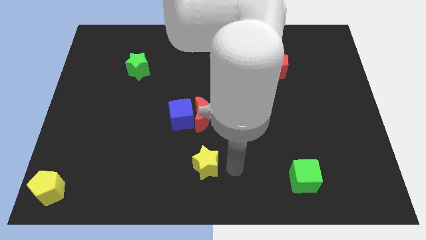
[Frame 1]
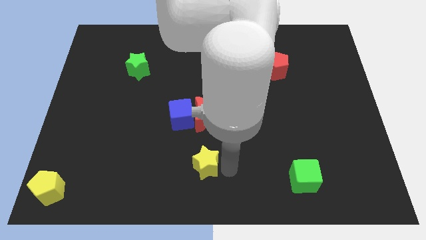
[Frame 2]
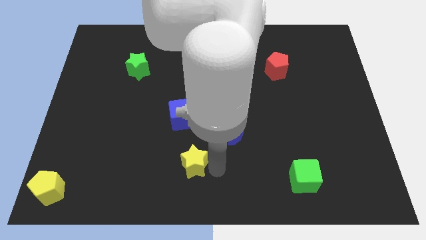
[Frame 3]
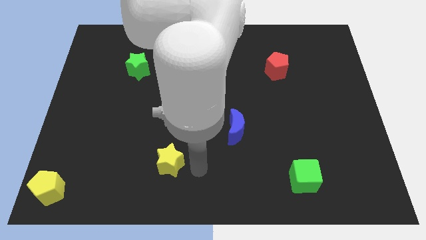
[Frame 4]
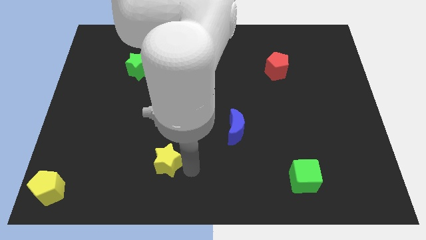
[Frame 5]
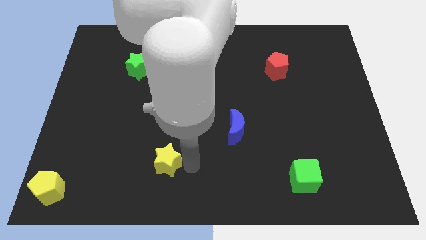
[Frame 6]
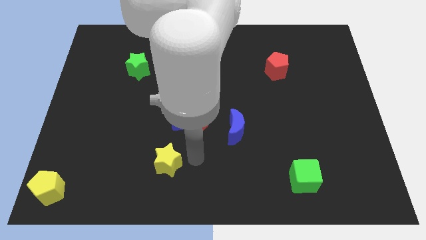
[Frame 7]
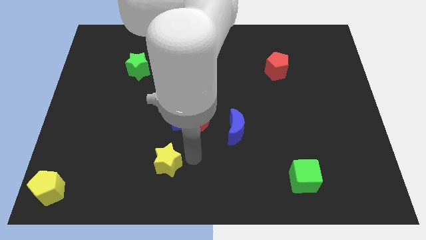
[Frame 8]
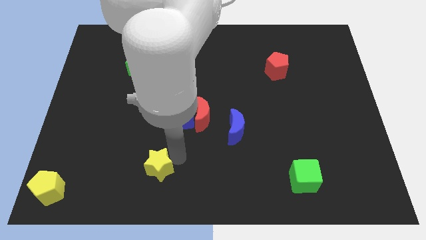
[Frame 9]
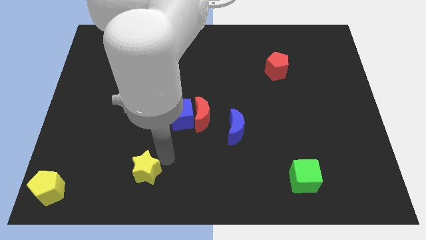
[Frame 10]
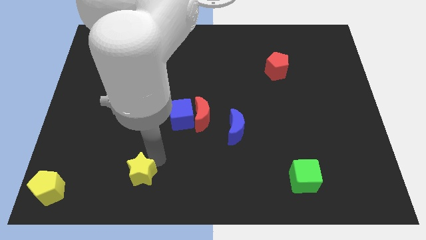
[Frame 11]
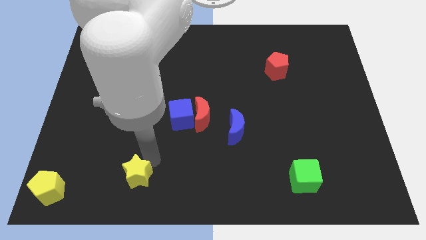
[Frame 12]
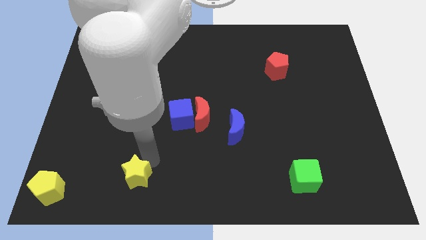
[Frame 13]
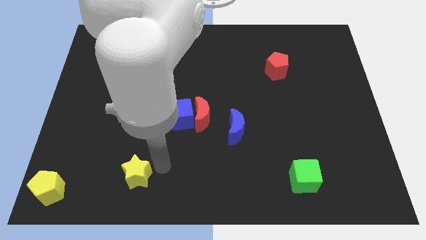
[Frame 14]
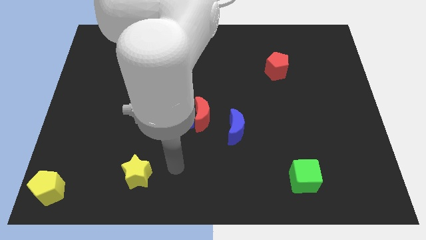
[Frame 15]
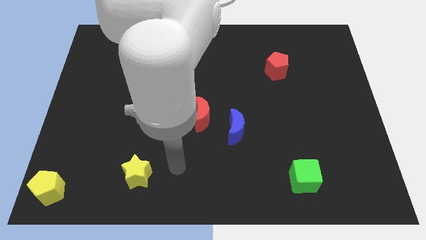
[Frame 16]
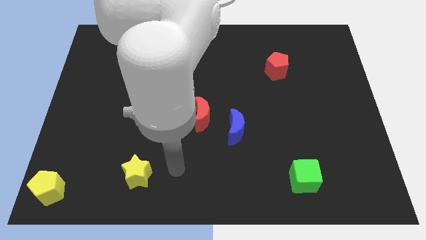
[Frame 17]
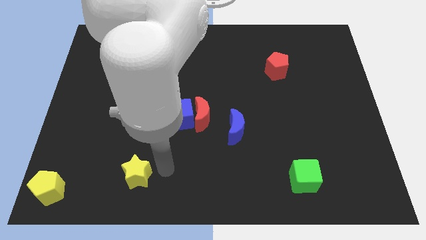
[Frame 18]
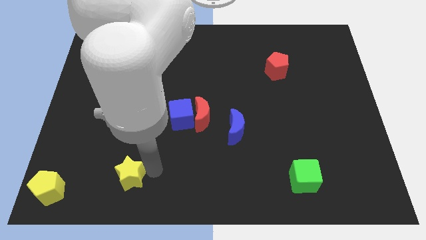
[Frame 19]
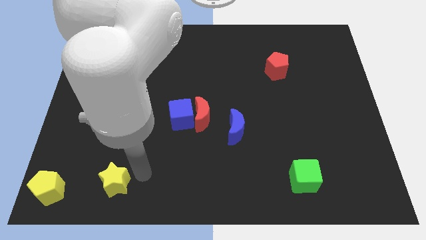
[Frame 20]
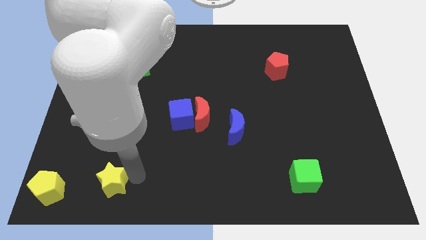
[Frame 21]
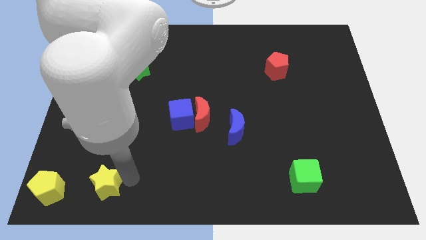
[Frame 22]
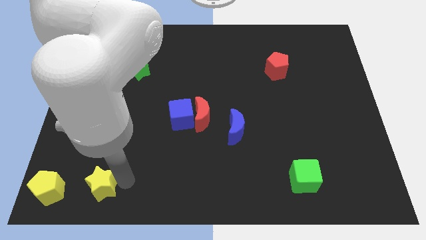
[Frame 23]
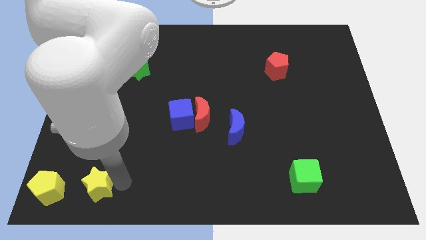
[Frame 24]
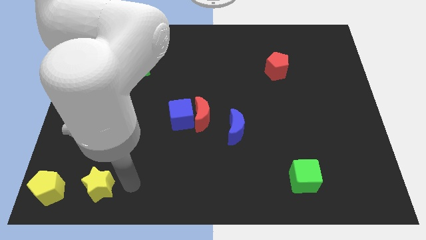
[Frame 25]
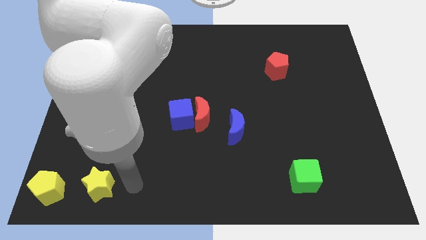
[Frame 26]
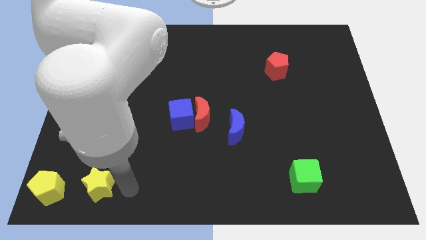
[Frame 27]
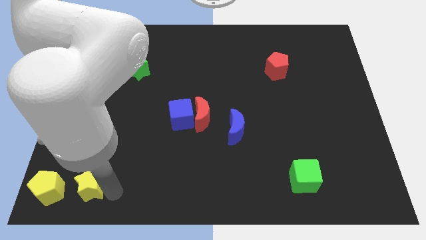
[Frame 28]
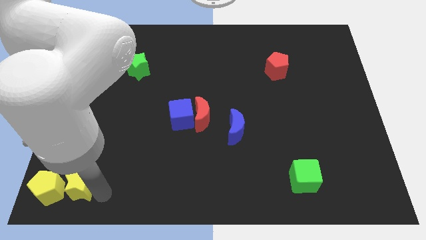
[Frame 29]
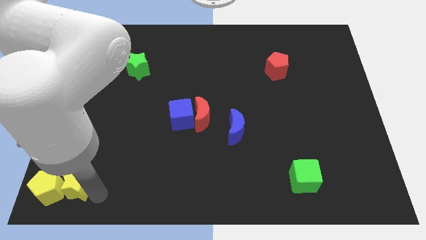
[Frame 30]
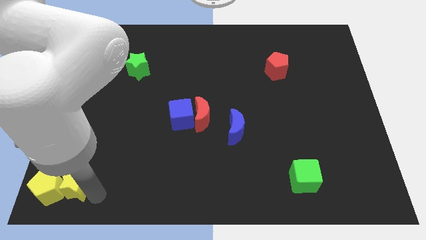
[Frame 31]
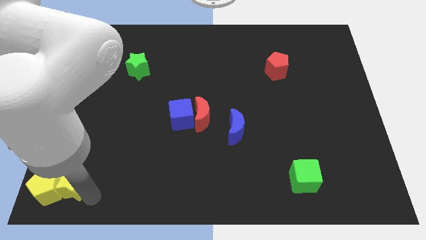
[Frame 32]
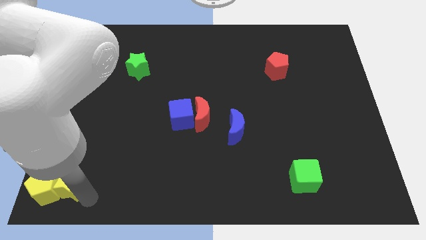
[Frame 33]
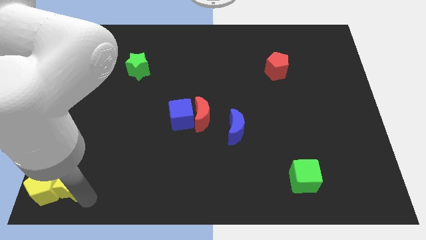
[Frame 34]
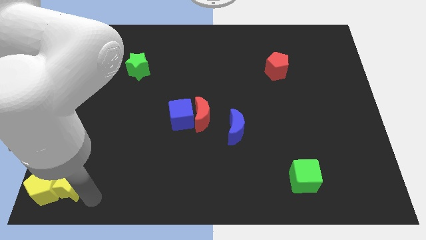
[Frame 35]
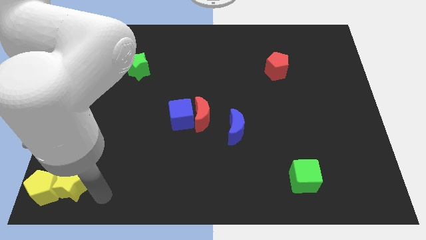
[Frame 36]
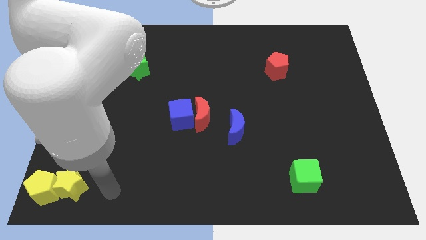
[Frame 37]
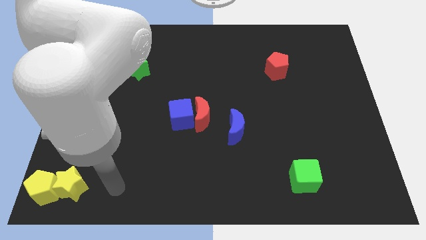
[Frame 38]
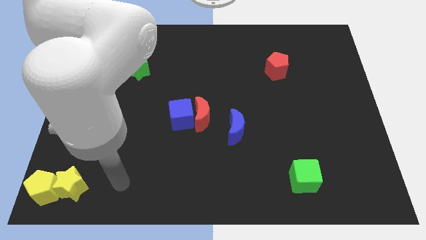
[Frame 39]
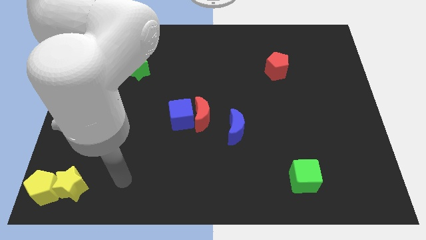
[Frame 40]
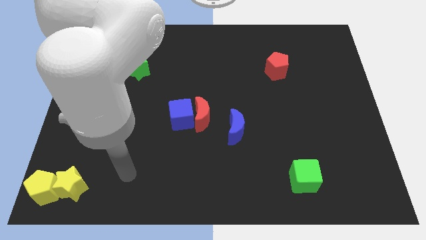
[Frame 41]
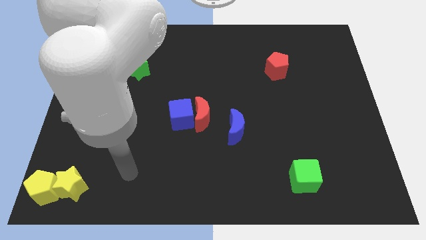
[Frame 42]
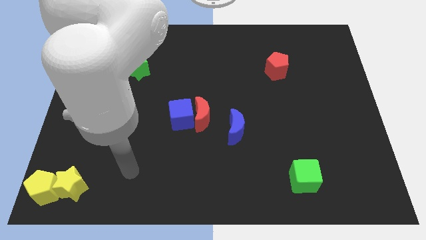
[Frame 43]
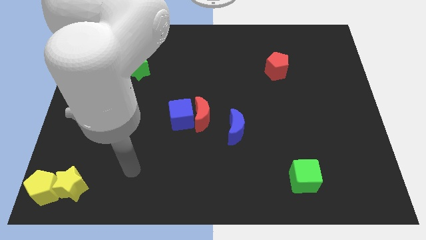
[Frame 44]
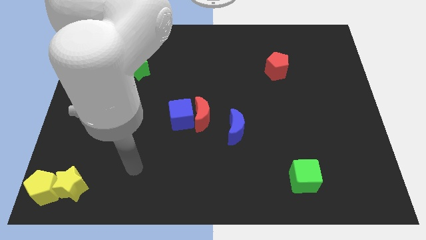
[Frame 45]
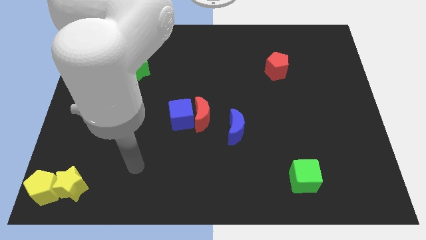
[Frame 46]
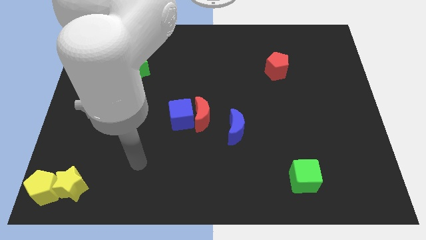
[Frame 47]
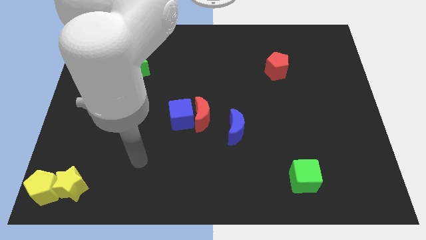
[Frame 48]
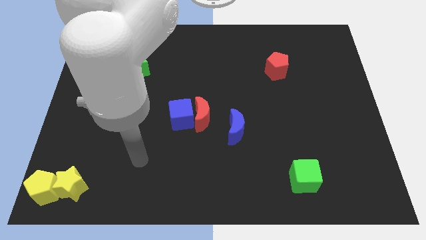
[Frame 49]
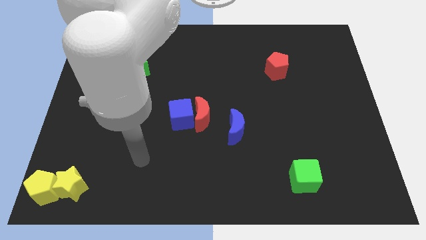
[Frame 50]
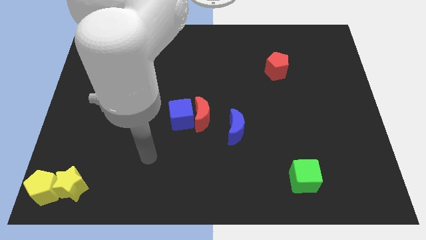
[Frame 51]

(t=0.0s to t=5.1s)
move the yellow star to the right of the yellow pentagon

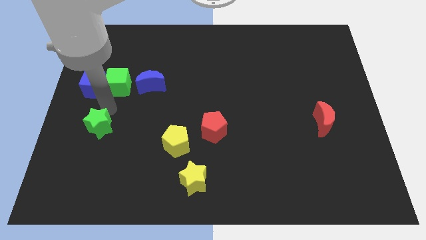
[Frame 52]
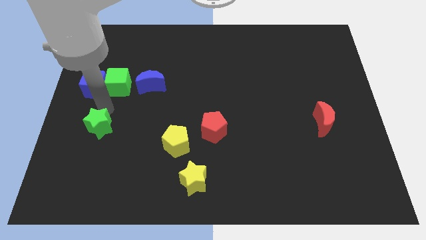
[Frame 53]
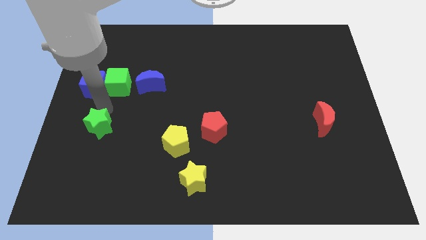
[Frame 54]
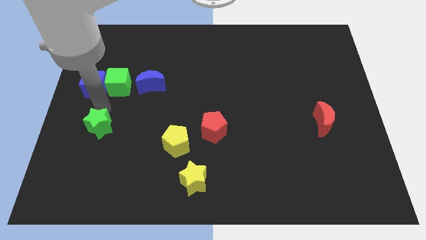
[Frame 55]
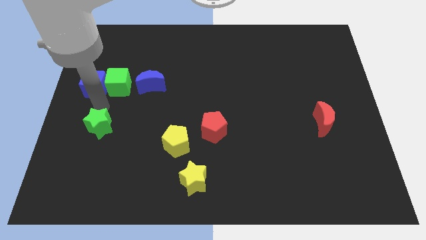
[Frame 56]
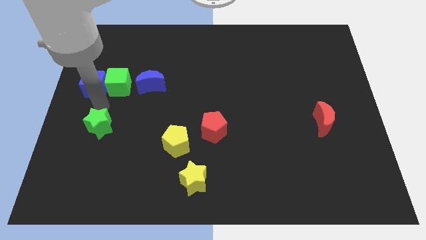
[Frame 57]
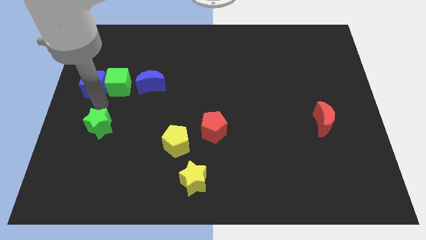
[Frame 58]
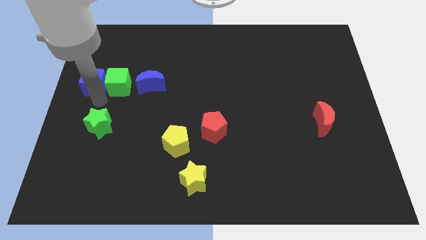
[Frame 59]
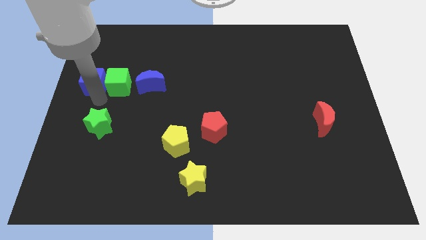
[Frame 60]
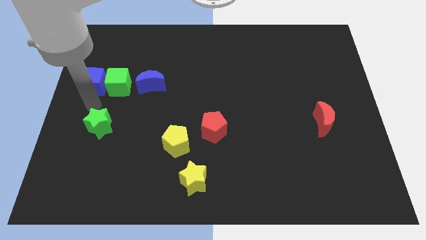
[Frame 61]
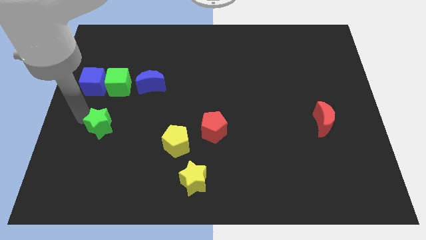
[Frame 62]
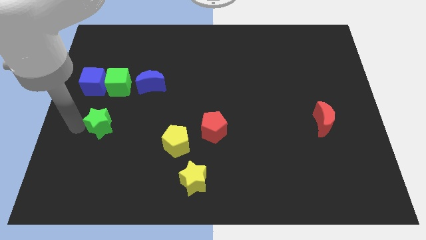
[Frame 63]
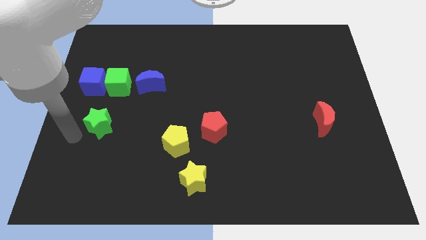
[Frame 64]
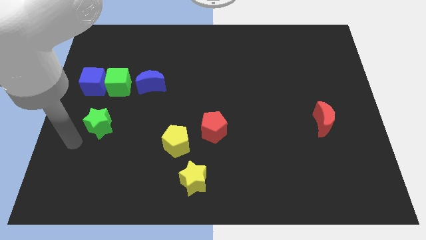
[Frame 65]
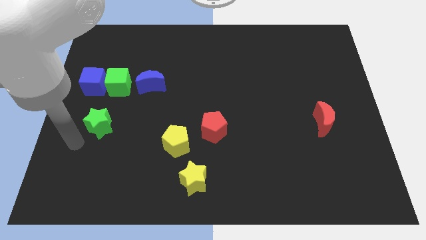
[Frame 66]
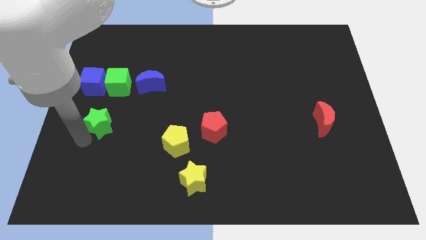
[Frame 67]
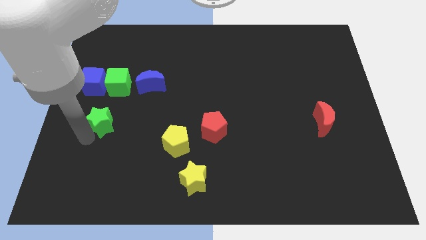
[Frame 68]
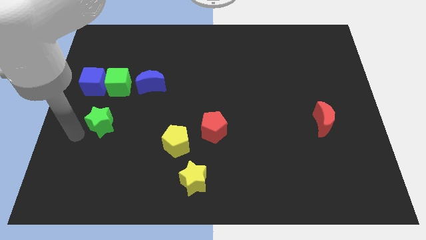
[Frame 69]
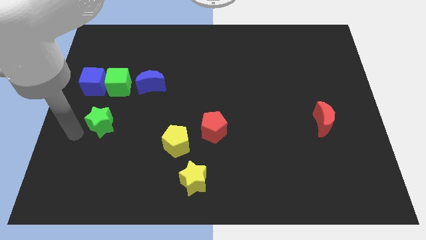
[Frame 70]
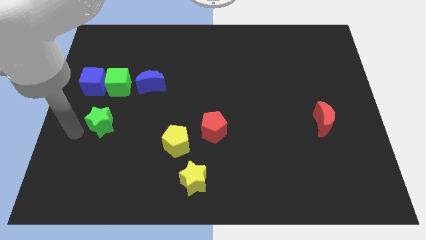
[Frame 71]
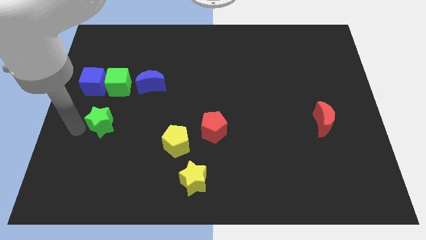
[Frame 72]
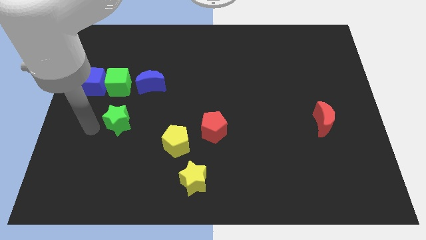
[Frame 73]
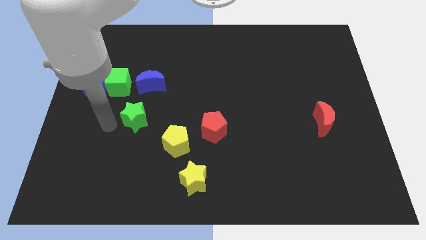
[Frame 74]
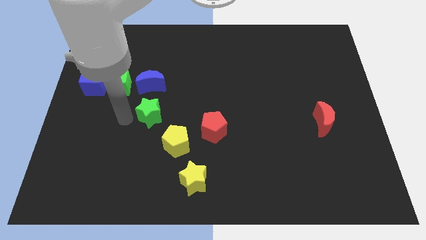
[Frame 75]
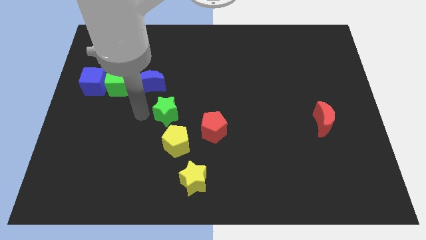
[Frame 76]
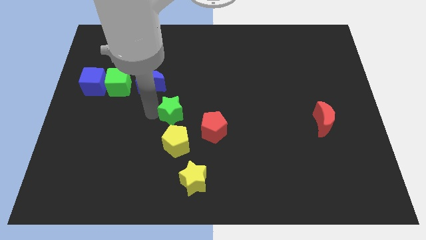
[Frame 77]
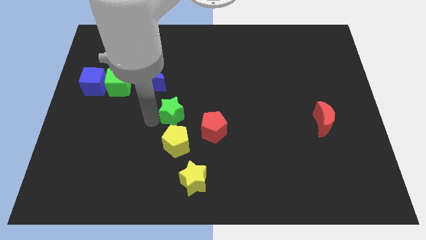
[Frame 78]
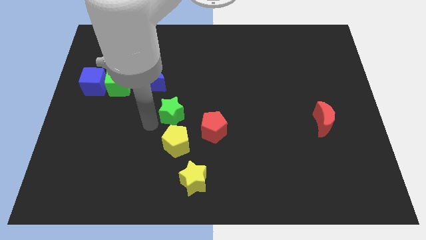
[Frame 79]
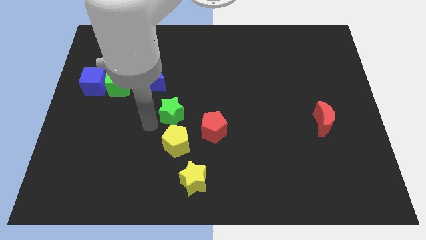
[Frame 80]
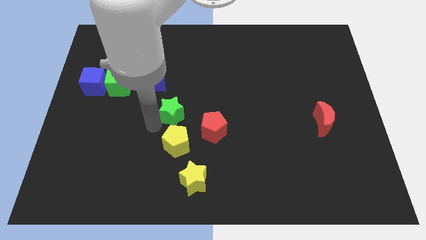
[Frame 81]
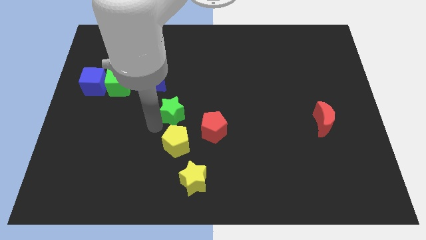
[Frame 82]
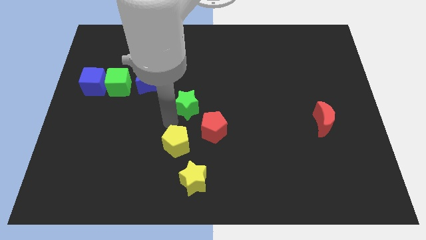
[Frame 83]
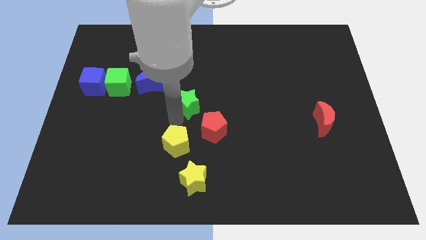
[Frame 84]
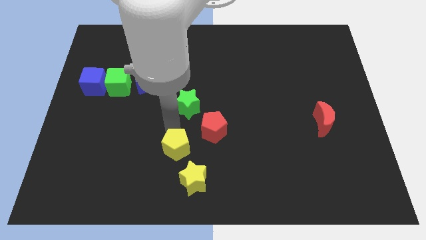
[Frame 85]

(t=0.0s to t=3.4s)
move the green star to the vertical top of the yellow pentagon

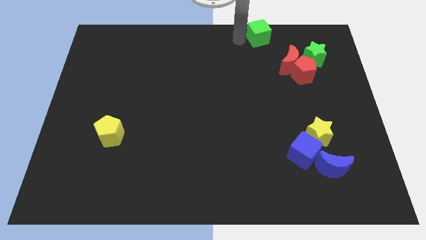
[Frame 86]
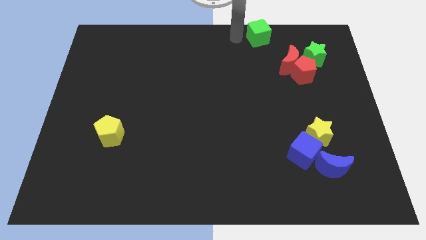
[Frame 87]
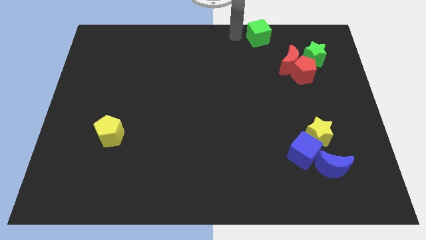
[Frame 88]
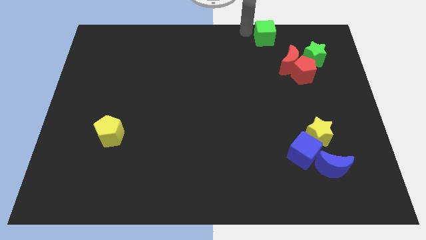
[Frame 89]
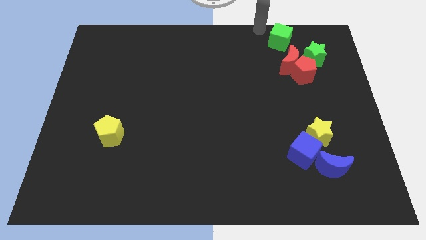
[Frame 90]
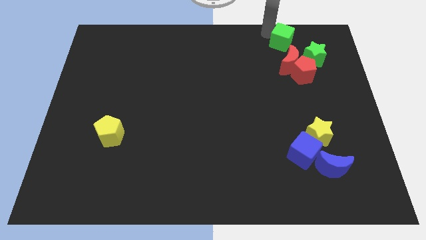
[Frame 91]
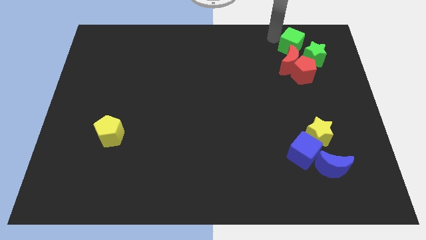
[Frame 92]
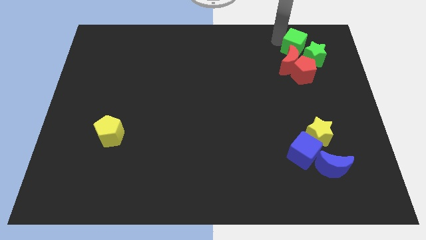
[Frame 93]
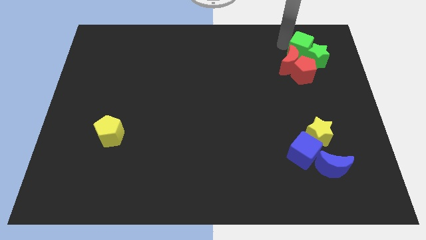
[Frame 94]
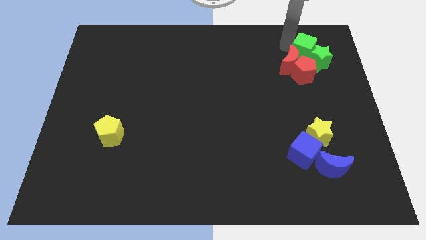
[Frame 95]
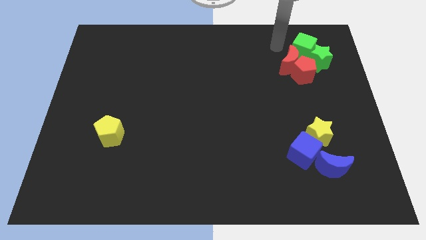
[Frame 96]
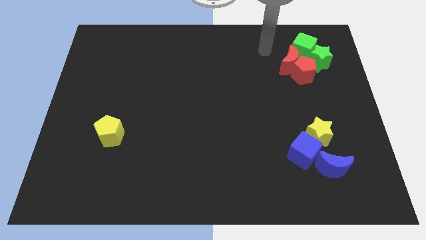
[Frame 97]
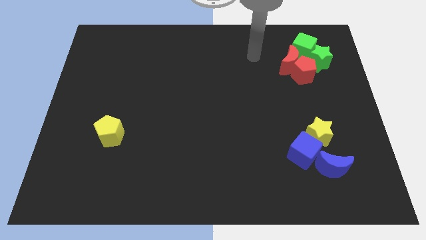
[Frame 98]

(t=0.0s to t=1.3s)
move the green cube above to the green star
